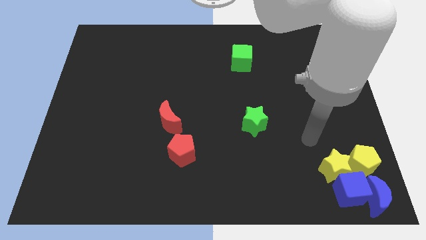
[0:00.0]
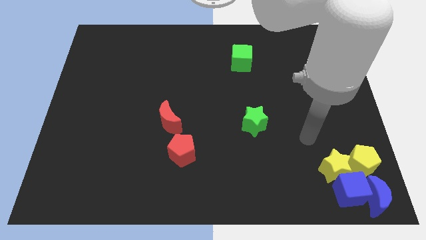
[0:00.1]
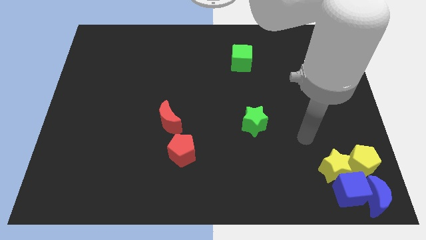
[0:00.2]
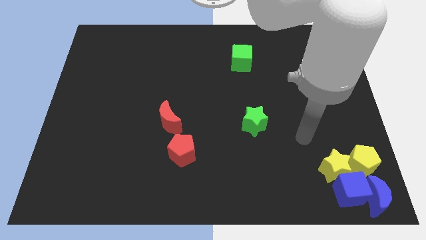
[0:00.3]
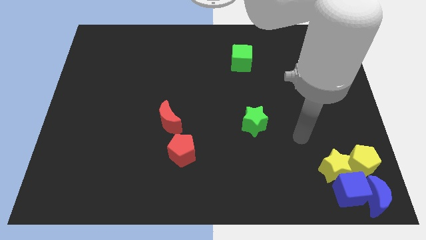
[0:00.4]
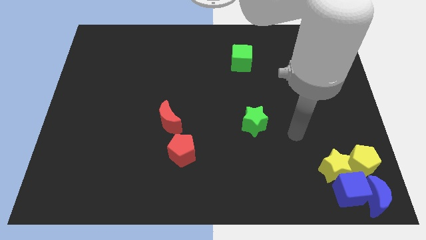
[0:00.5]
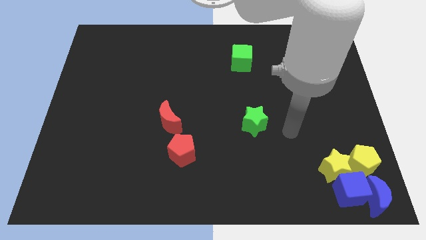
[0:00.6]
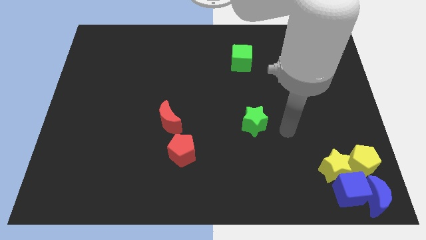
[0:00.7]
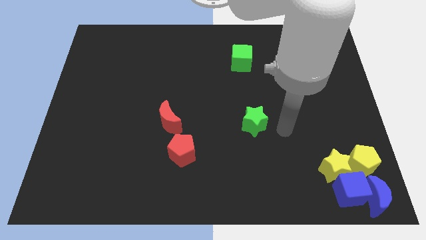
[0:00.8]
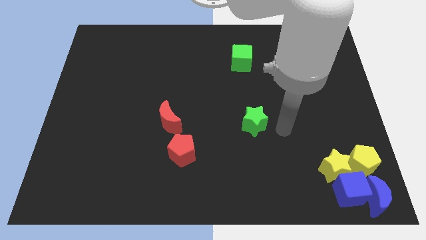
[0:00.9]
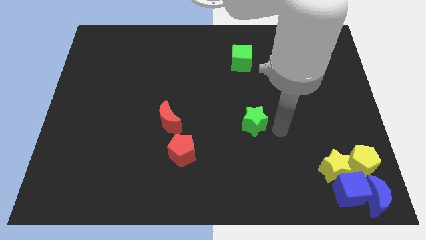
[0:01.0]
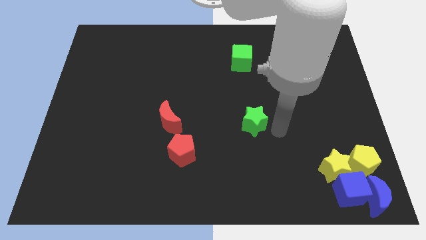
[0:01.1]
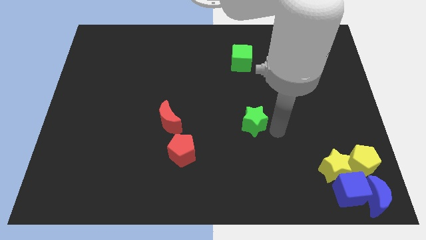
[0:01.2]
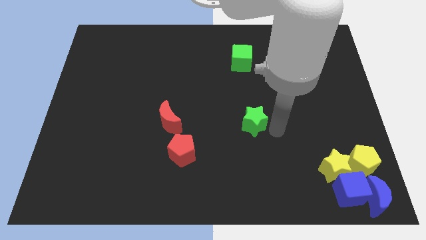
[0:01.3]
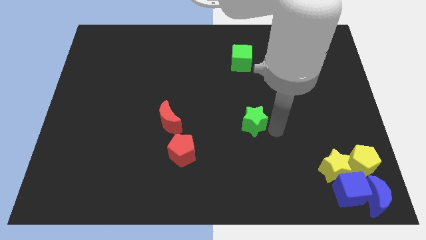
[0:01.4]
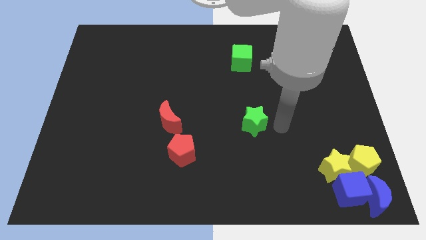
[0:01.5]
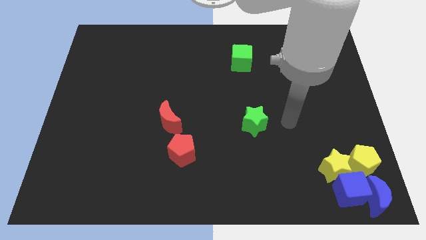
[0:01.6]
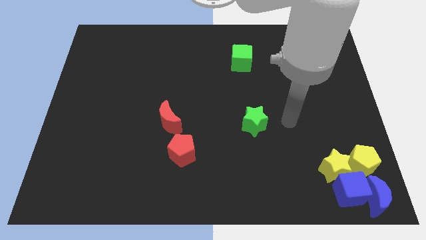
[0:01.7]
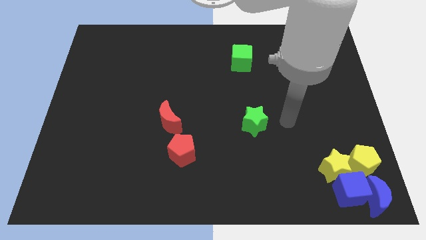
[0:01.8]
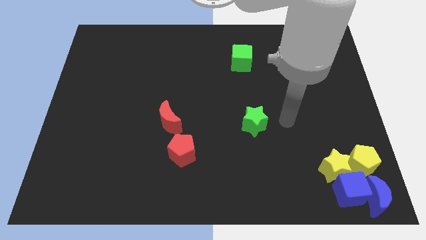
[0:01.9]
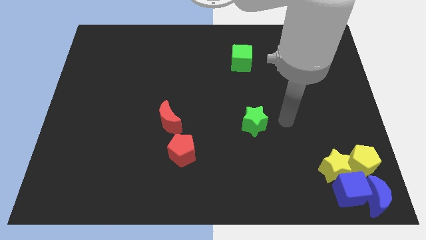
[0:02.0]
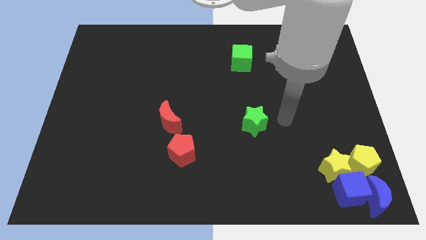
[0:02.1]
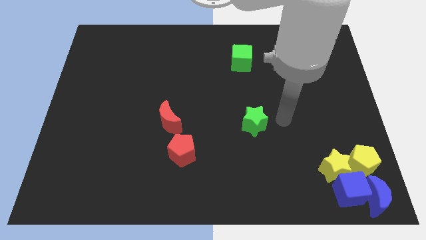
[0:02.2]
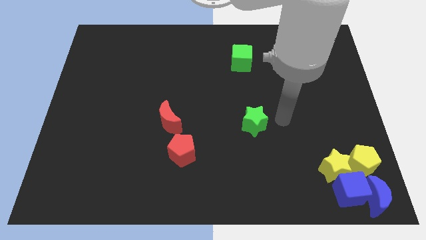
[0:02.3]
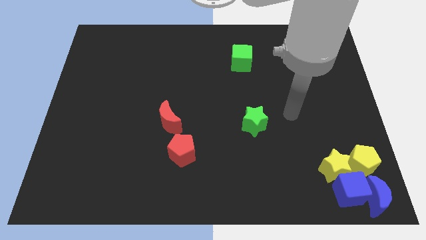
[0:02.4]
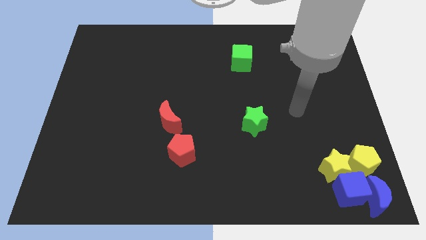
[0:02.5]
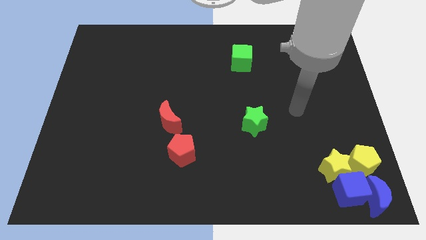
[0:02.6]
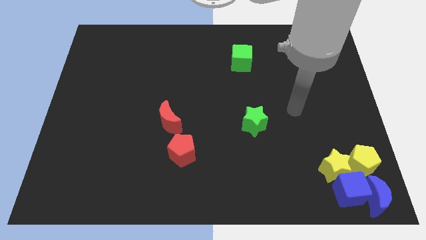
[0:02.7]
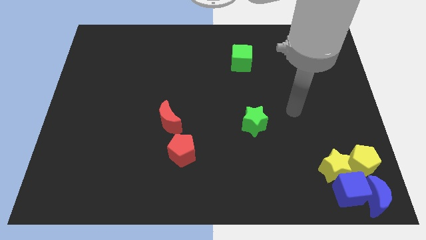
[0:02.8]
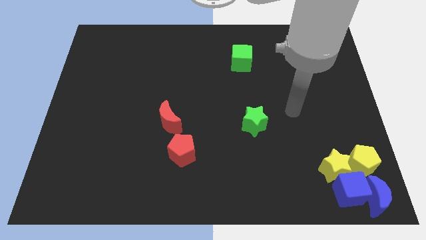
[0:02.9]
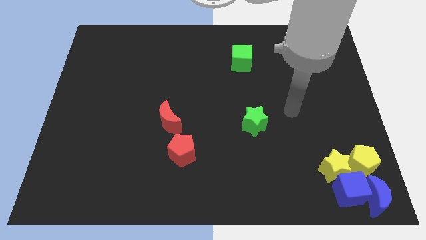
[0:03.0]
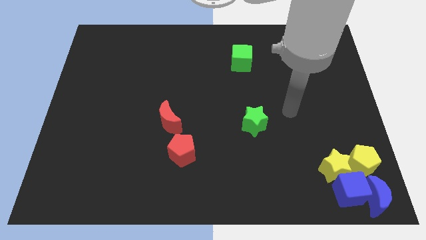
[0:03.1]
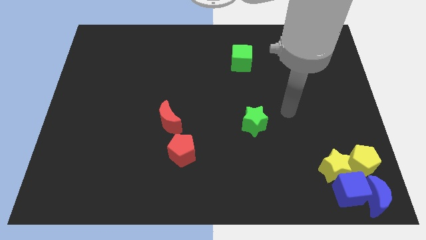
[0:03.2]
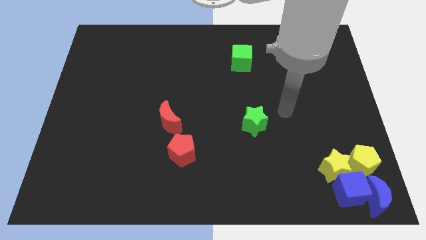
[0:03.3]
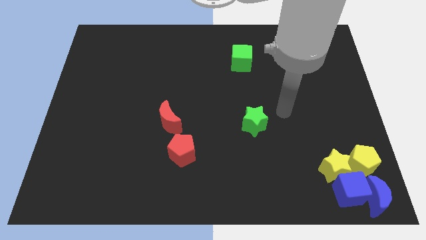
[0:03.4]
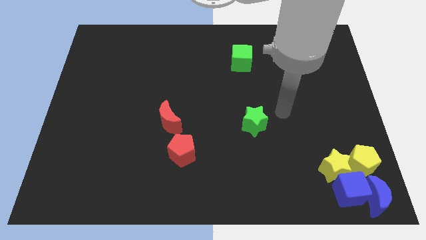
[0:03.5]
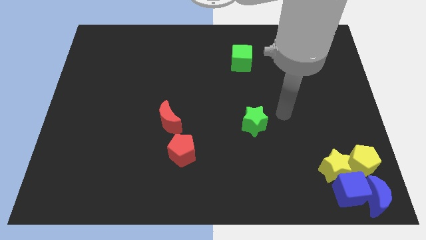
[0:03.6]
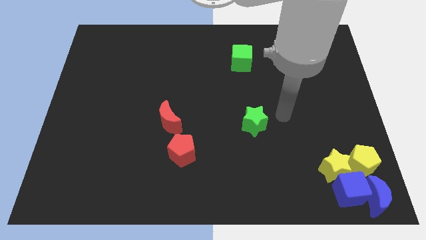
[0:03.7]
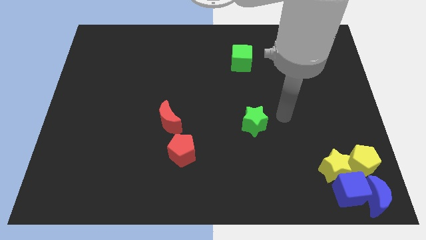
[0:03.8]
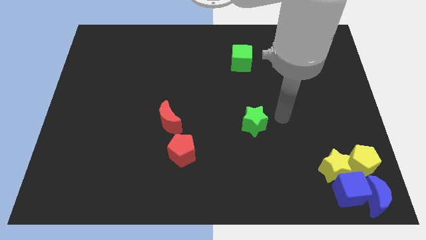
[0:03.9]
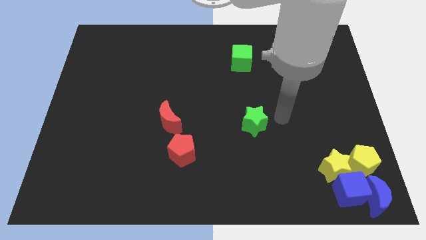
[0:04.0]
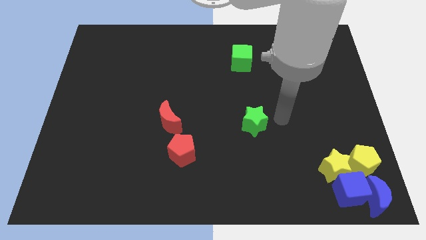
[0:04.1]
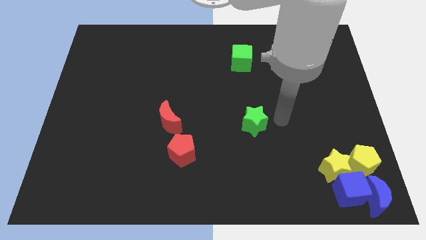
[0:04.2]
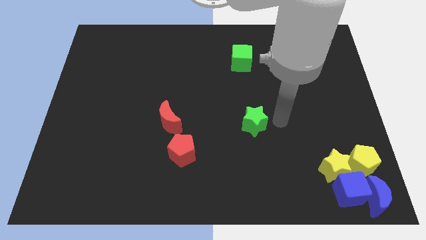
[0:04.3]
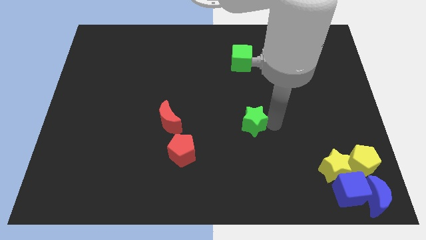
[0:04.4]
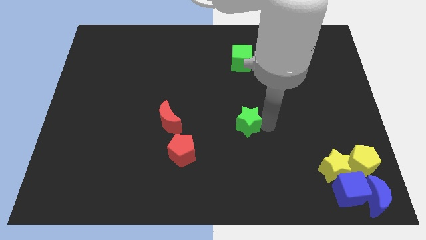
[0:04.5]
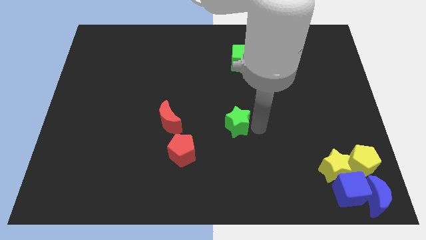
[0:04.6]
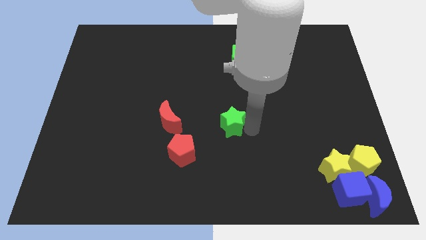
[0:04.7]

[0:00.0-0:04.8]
slightly push the green star towards the center

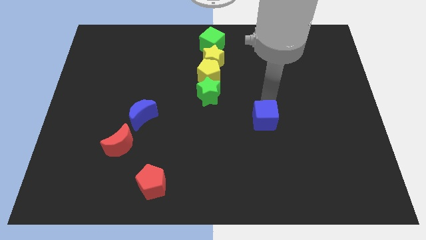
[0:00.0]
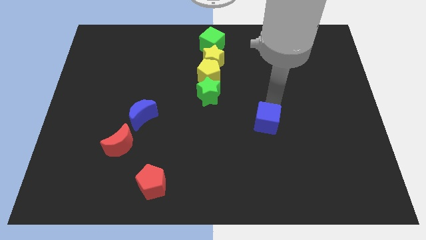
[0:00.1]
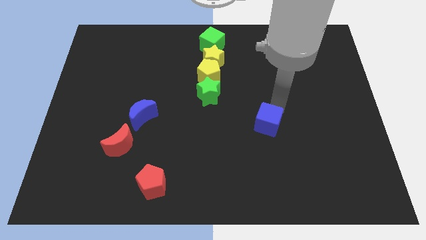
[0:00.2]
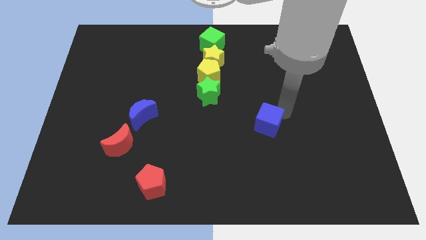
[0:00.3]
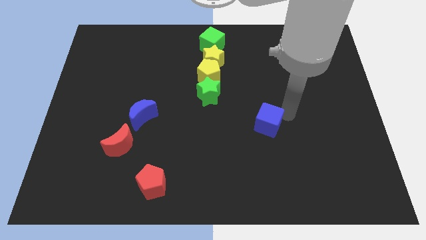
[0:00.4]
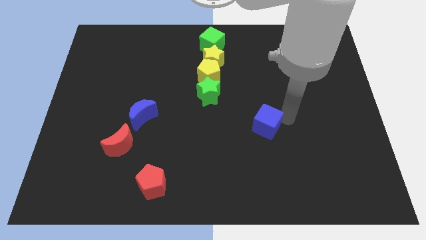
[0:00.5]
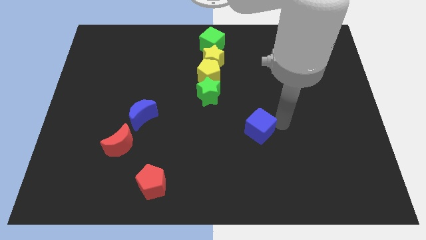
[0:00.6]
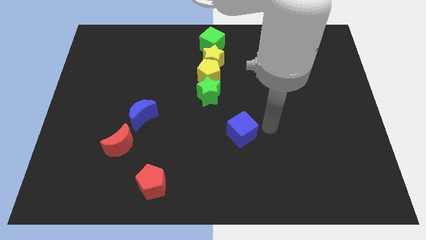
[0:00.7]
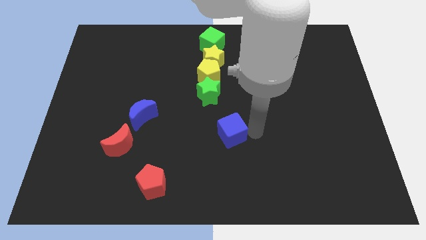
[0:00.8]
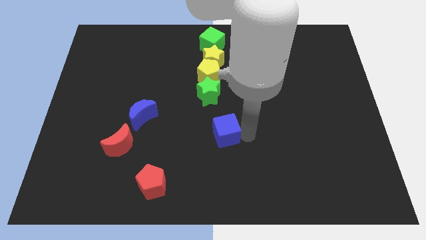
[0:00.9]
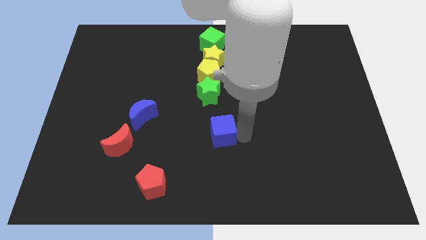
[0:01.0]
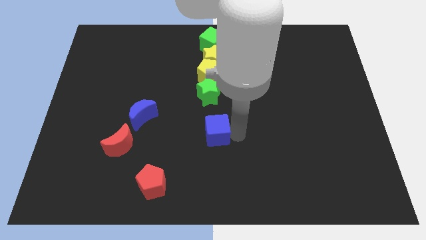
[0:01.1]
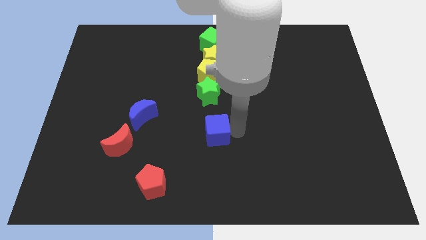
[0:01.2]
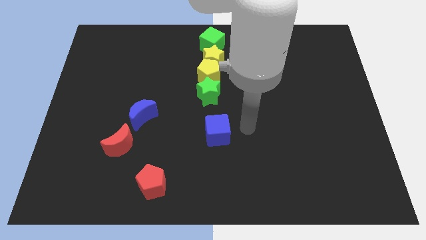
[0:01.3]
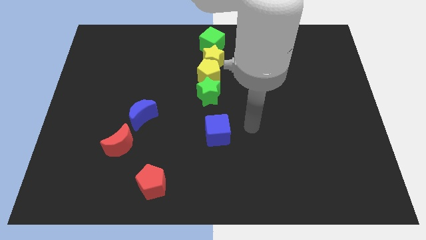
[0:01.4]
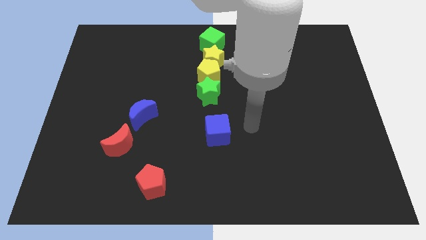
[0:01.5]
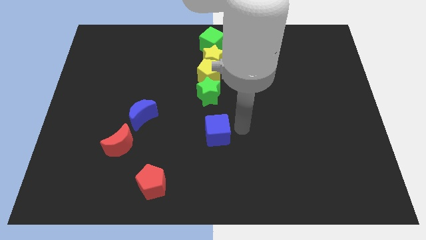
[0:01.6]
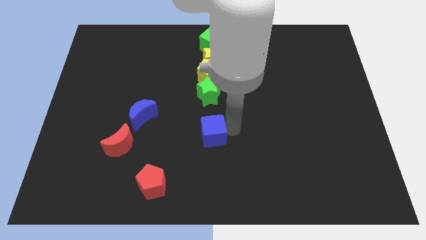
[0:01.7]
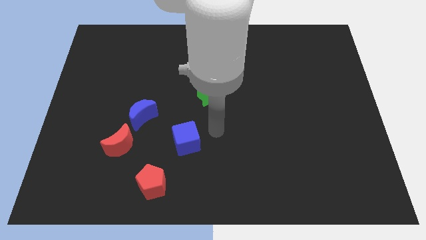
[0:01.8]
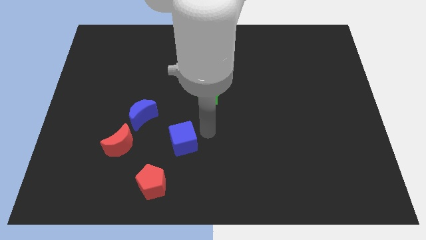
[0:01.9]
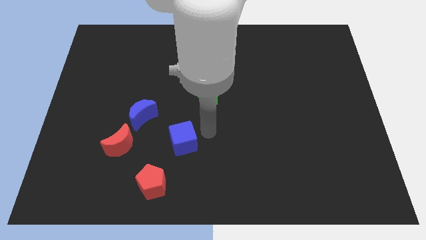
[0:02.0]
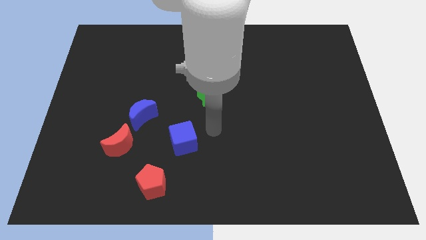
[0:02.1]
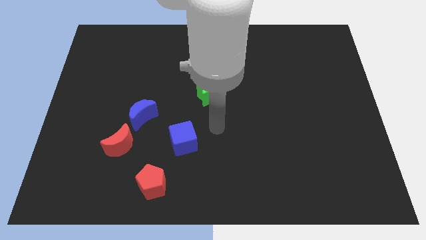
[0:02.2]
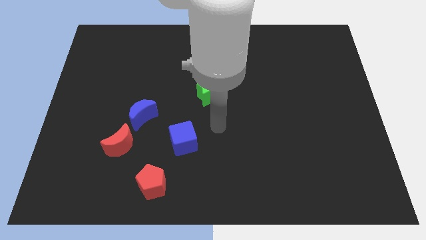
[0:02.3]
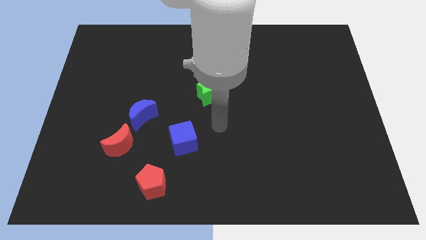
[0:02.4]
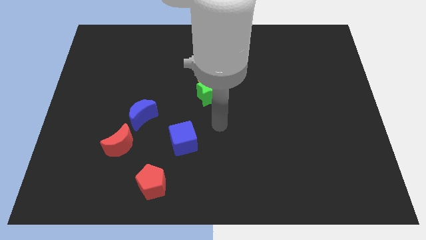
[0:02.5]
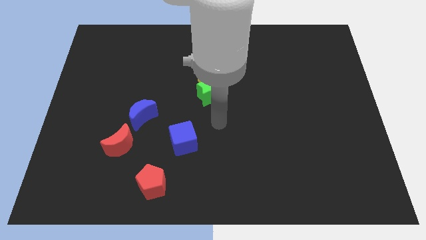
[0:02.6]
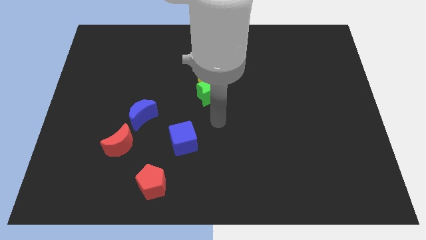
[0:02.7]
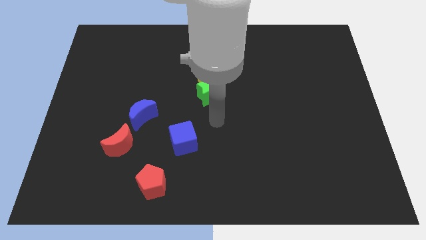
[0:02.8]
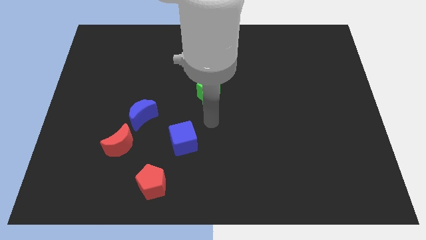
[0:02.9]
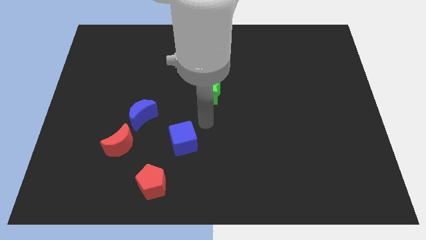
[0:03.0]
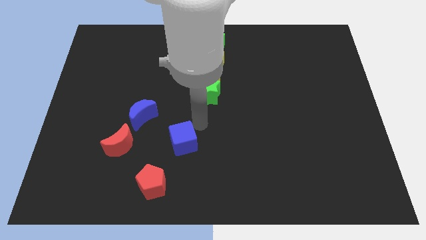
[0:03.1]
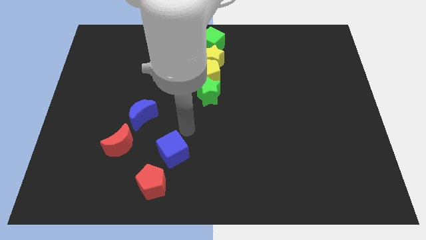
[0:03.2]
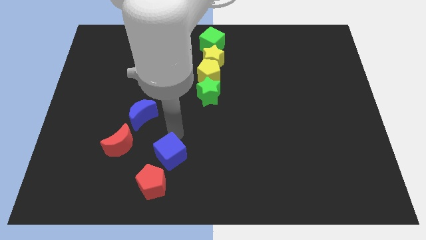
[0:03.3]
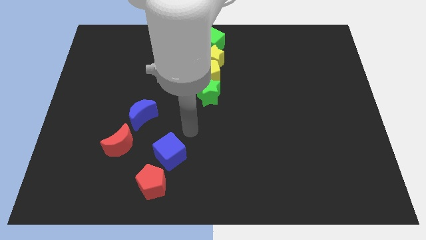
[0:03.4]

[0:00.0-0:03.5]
move the blue cube towards the left to the board

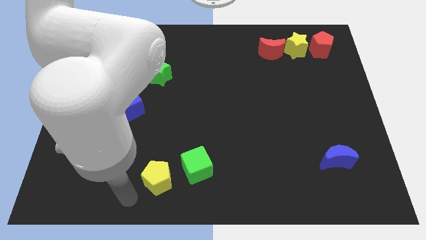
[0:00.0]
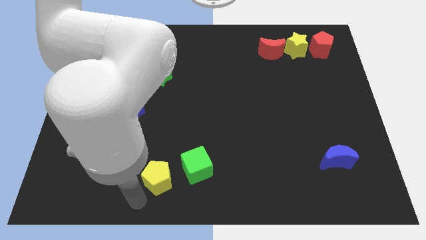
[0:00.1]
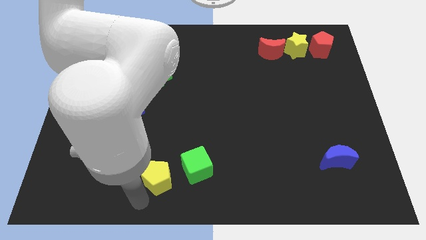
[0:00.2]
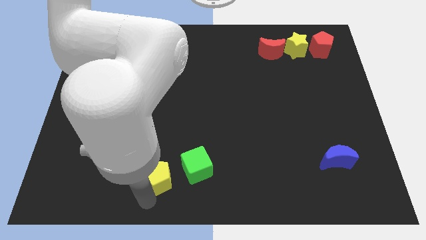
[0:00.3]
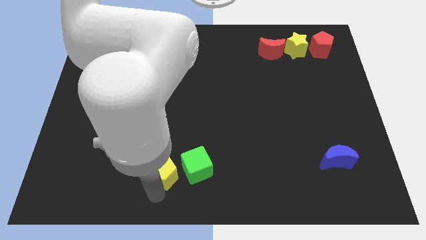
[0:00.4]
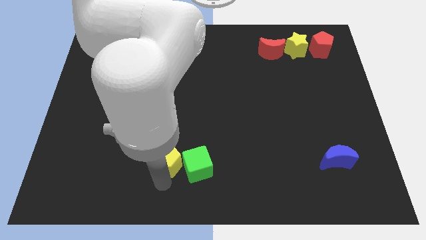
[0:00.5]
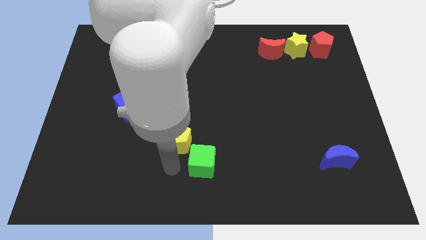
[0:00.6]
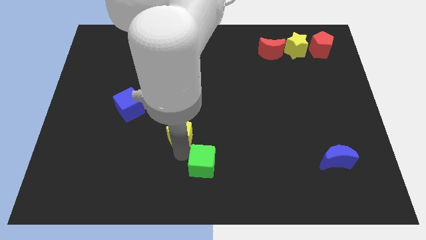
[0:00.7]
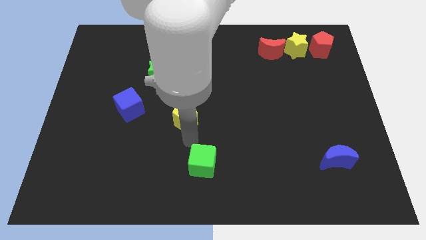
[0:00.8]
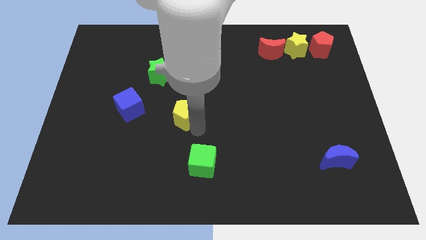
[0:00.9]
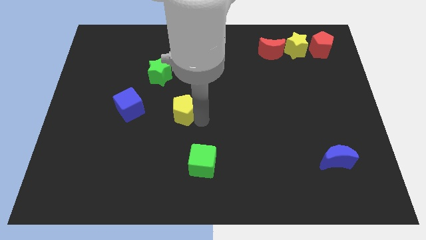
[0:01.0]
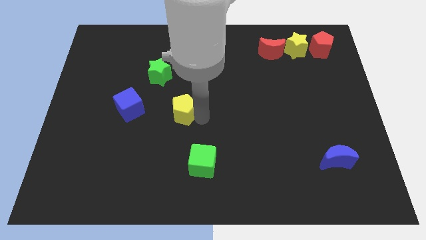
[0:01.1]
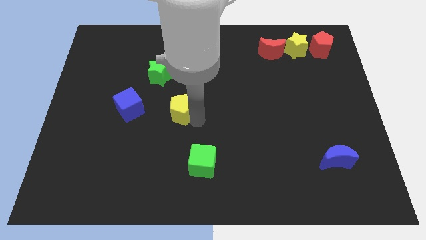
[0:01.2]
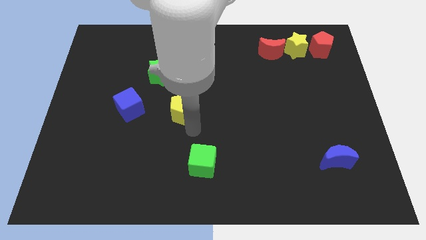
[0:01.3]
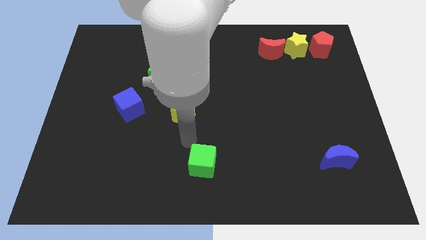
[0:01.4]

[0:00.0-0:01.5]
place the yellow pentagon right to the blue cube
